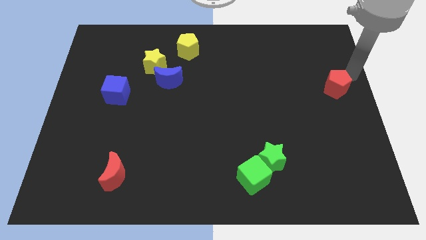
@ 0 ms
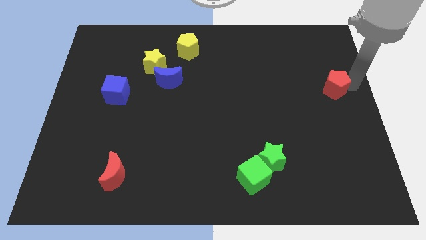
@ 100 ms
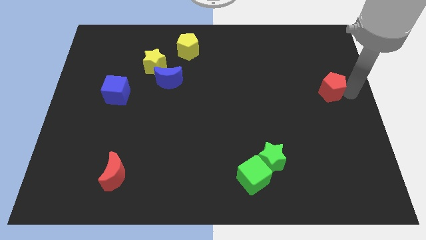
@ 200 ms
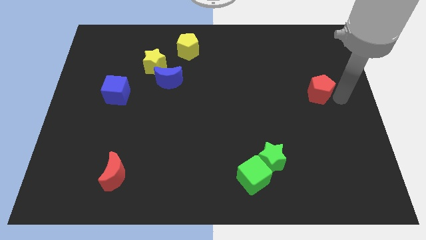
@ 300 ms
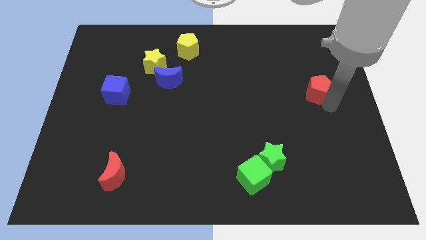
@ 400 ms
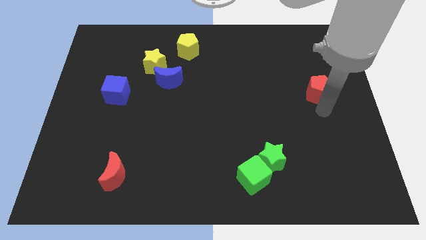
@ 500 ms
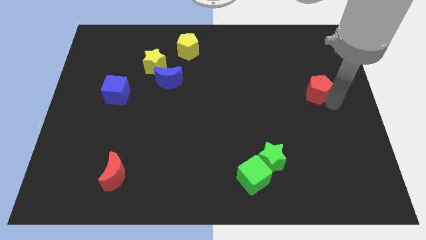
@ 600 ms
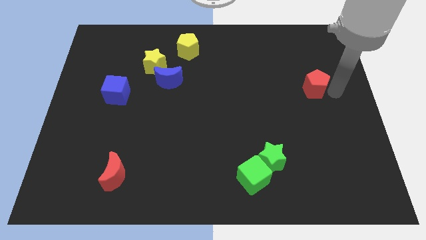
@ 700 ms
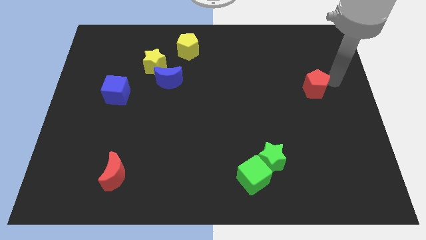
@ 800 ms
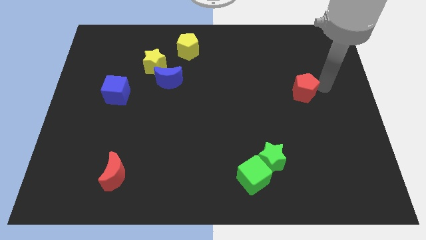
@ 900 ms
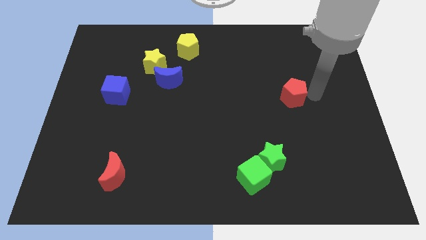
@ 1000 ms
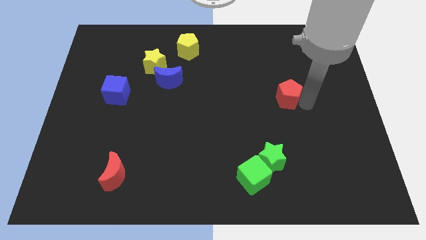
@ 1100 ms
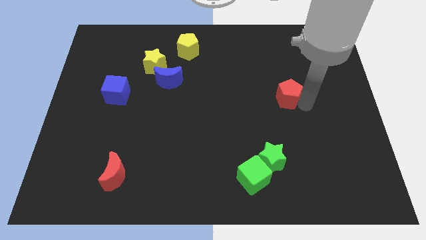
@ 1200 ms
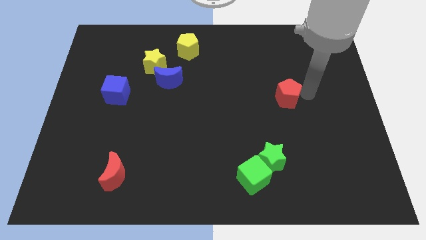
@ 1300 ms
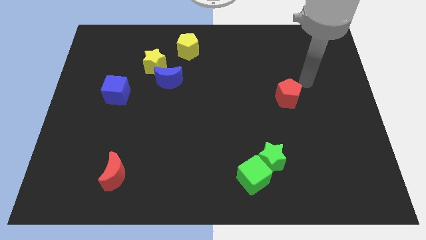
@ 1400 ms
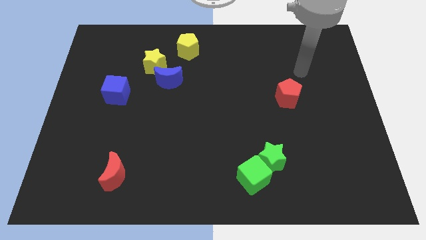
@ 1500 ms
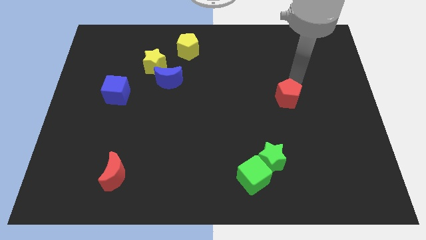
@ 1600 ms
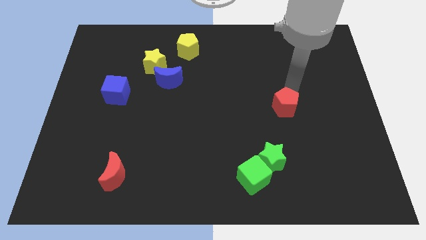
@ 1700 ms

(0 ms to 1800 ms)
move the red penatgon on top of green star

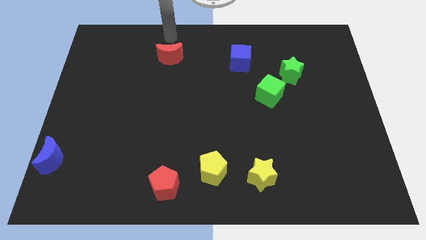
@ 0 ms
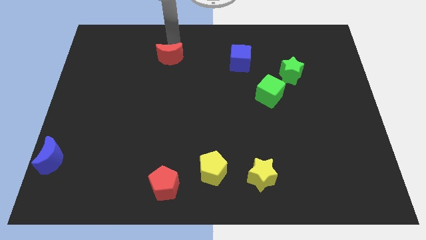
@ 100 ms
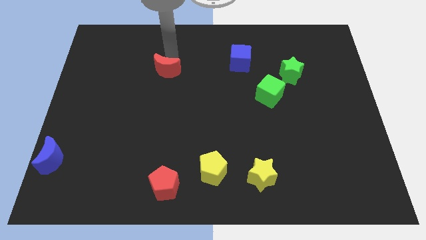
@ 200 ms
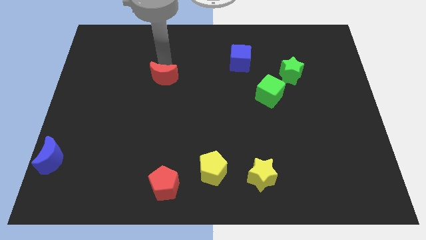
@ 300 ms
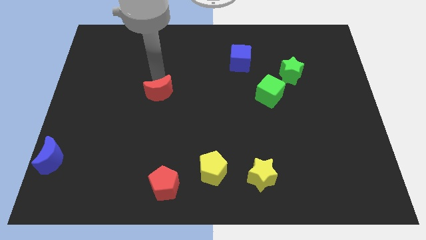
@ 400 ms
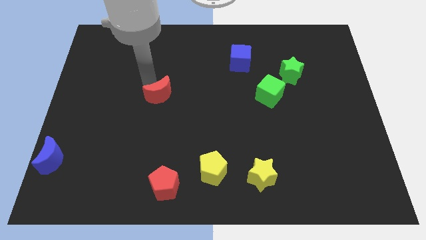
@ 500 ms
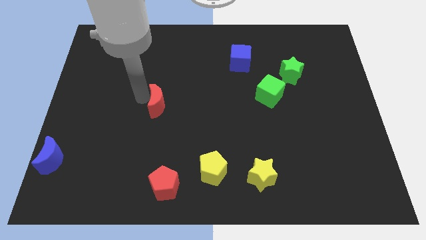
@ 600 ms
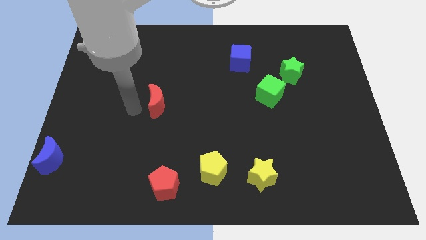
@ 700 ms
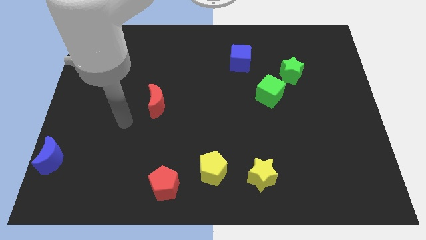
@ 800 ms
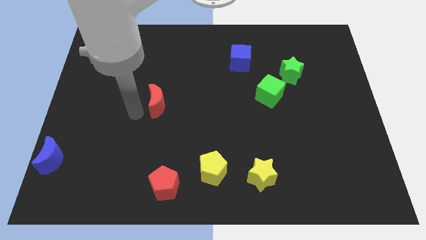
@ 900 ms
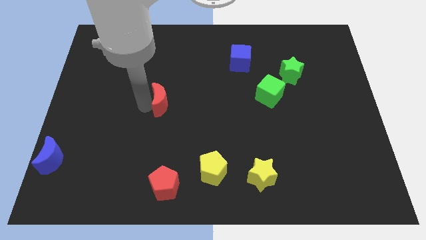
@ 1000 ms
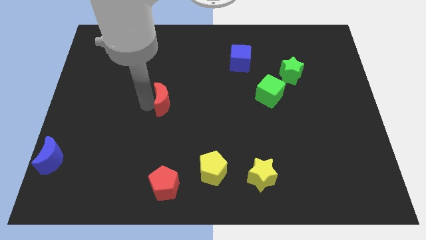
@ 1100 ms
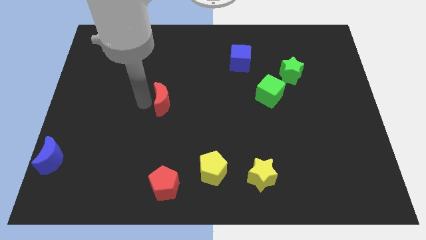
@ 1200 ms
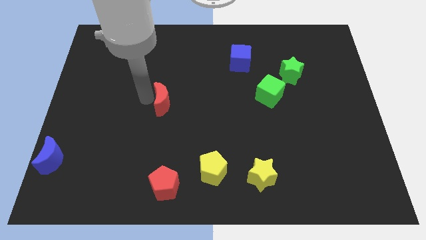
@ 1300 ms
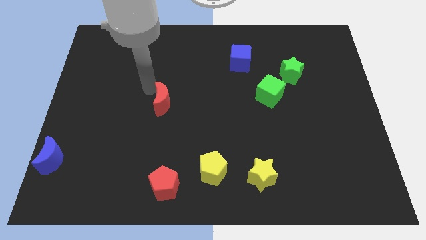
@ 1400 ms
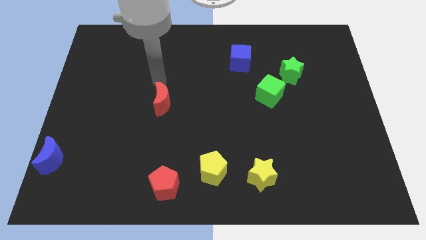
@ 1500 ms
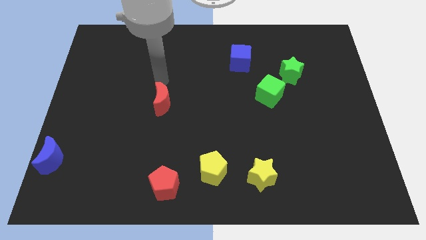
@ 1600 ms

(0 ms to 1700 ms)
slightly push down the red moon

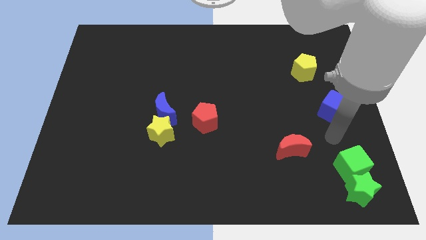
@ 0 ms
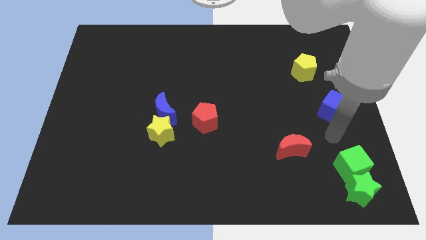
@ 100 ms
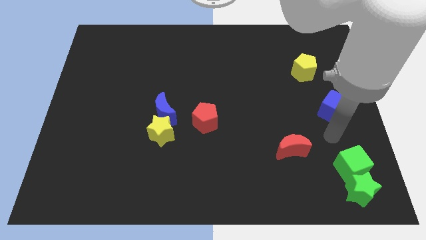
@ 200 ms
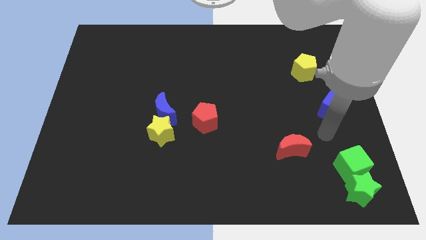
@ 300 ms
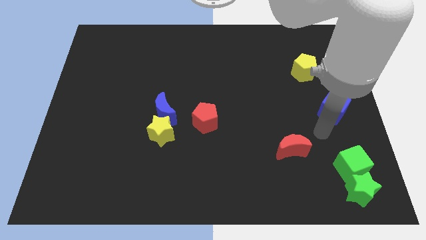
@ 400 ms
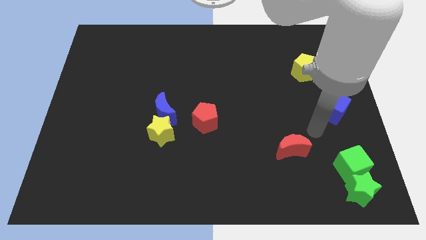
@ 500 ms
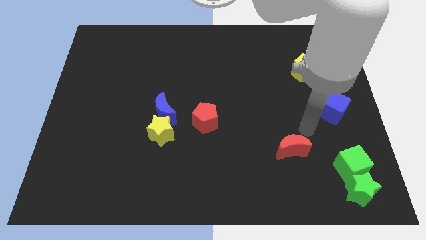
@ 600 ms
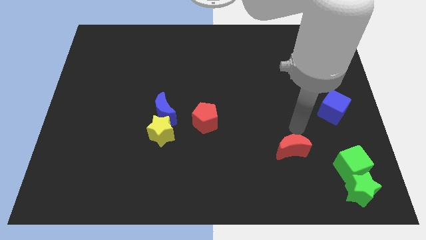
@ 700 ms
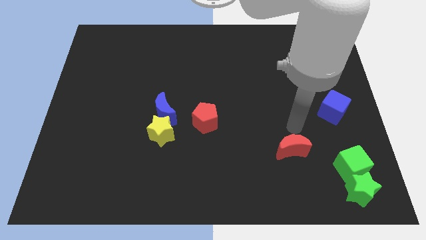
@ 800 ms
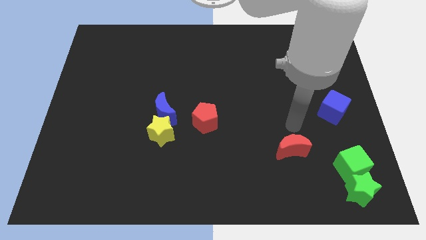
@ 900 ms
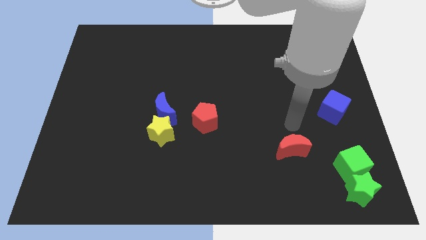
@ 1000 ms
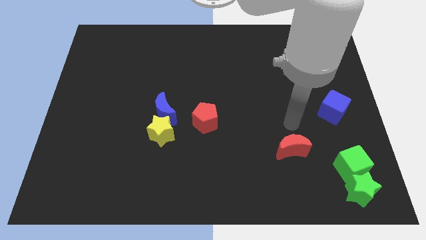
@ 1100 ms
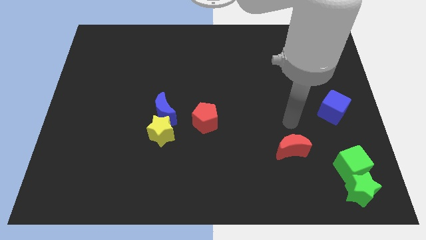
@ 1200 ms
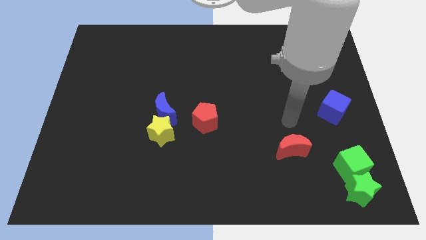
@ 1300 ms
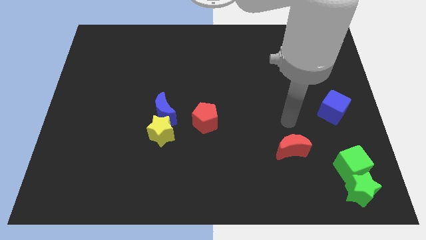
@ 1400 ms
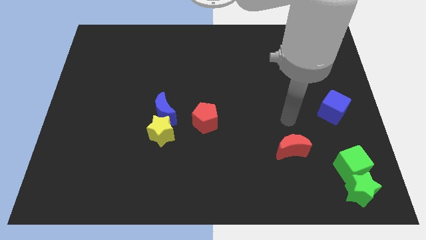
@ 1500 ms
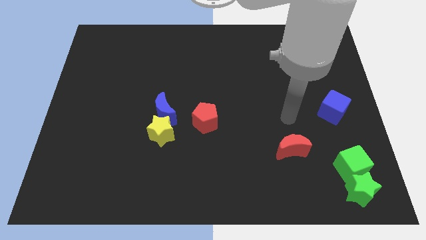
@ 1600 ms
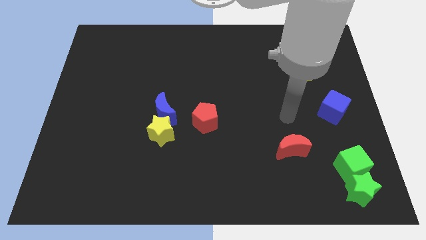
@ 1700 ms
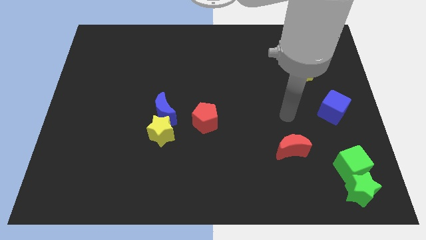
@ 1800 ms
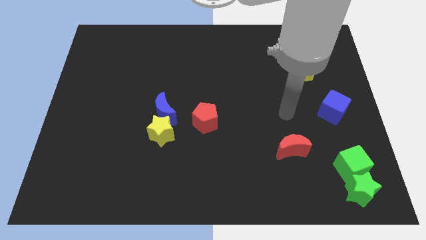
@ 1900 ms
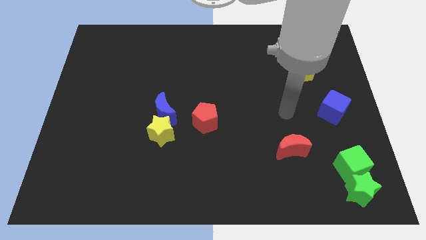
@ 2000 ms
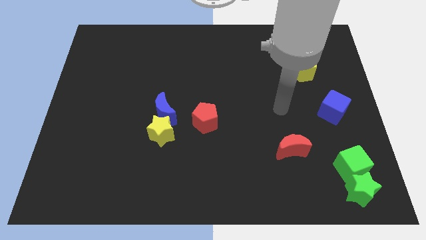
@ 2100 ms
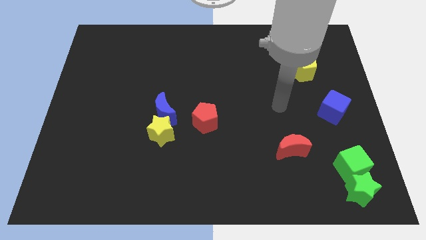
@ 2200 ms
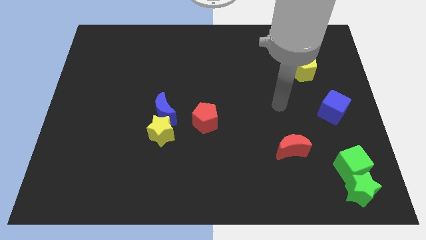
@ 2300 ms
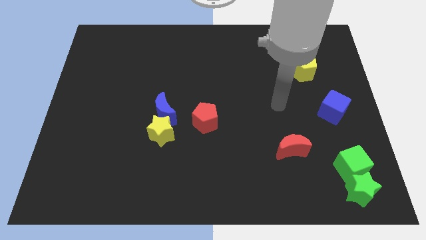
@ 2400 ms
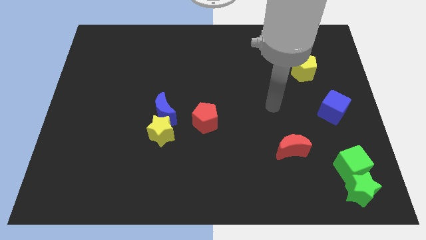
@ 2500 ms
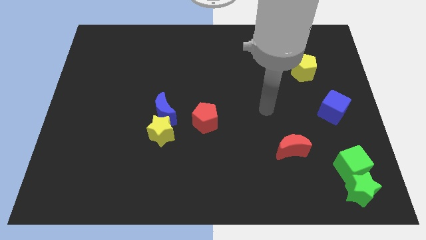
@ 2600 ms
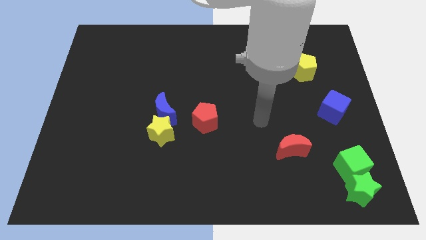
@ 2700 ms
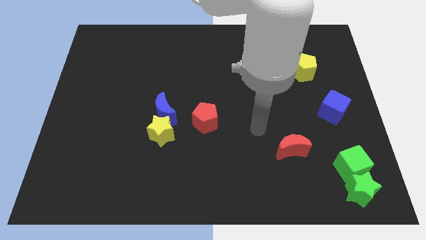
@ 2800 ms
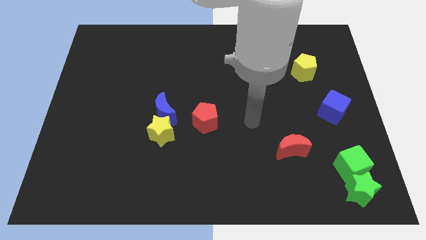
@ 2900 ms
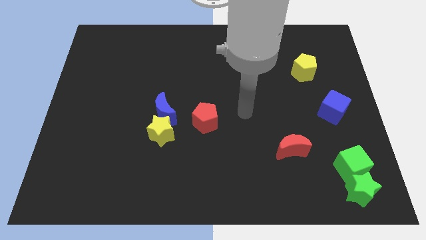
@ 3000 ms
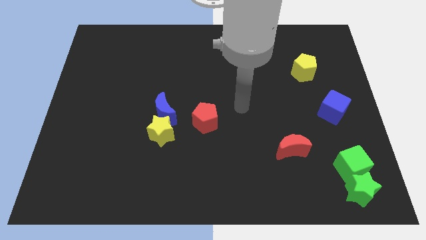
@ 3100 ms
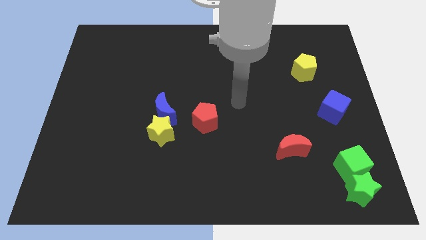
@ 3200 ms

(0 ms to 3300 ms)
point your arm at the center of the board

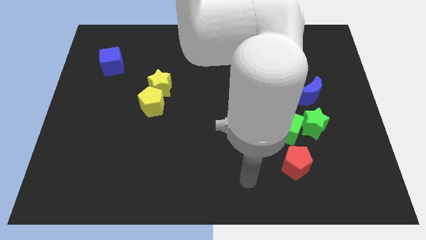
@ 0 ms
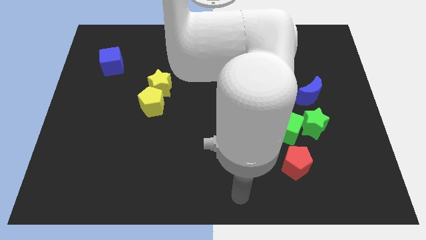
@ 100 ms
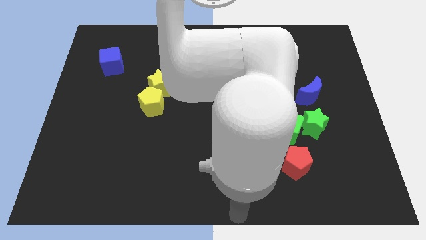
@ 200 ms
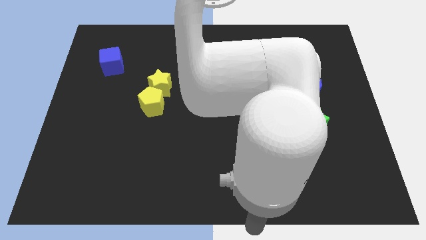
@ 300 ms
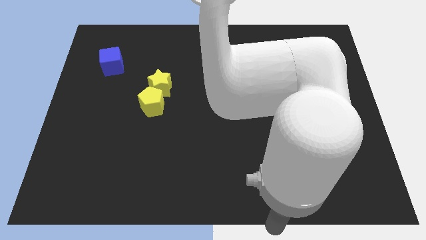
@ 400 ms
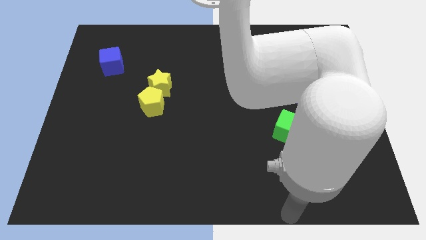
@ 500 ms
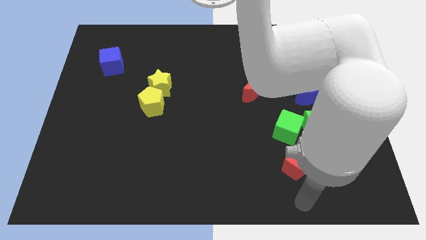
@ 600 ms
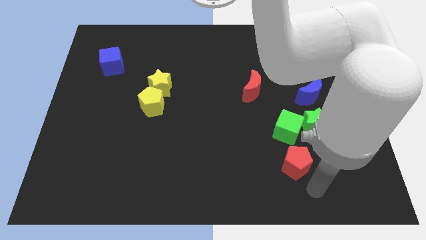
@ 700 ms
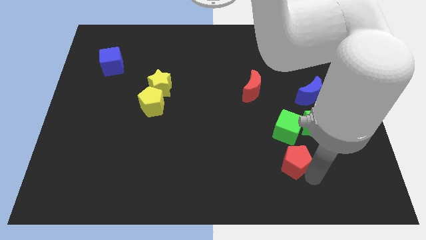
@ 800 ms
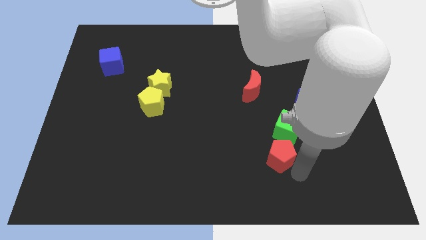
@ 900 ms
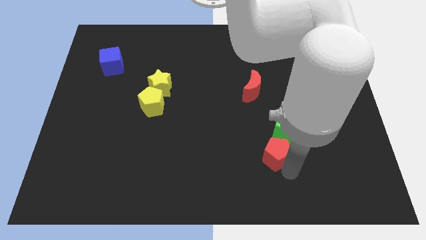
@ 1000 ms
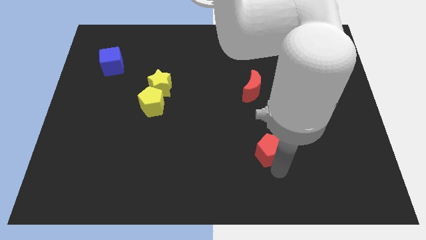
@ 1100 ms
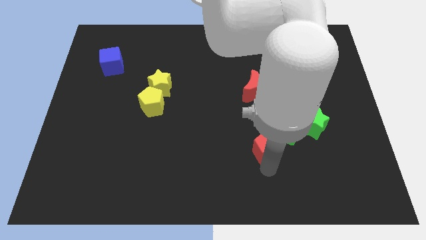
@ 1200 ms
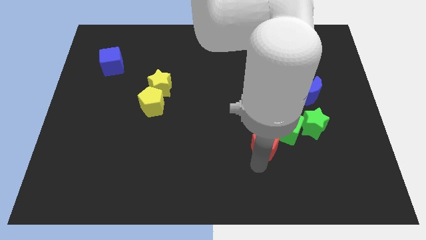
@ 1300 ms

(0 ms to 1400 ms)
move the red pentagon diagonally to the left of green cube

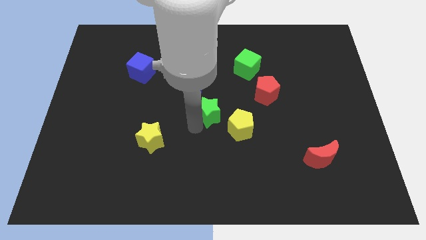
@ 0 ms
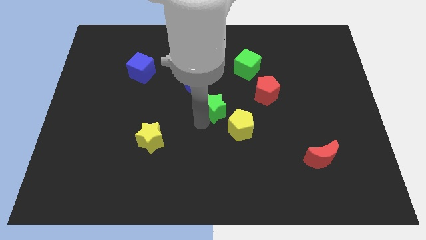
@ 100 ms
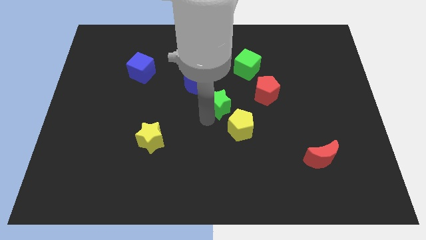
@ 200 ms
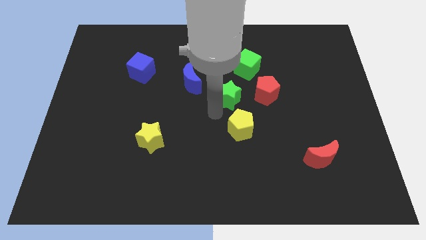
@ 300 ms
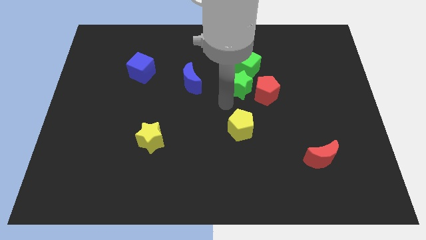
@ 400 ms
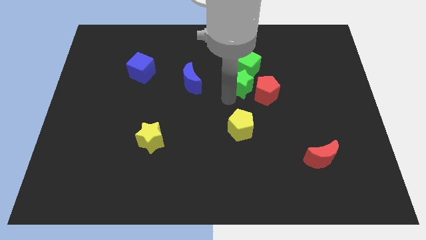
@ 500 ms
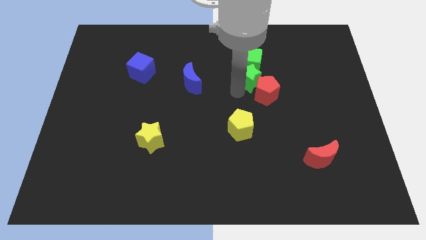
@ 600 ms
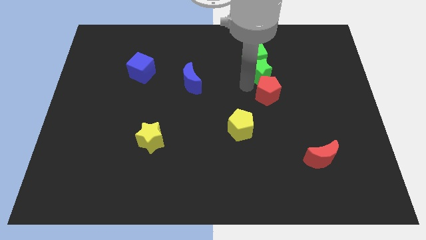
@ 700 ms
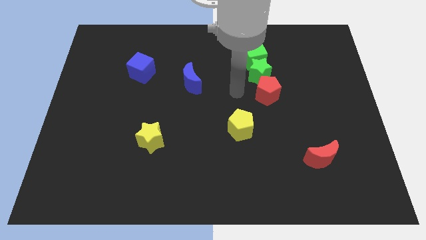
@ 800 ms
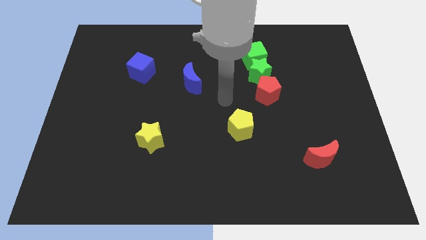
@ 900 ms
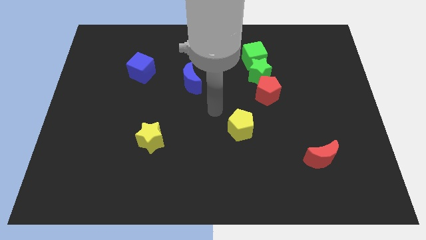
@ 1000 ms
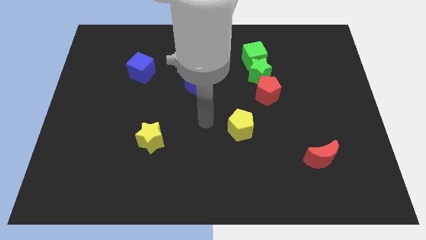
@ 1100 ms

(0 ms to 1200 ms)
move green star below the green cube
